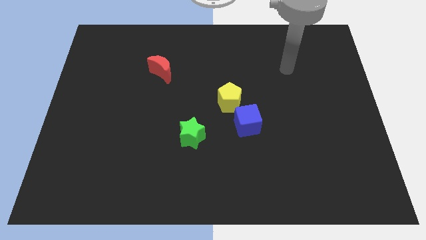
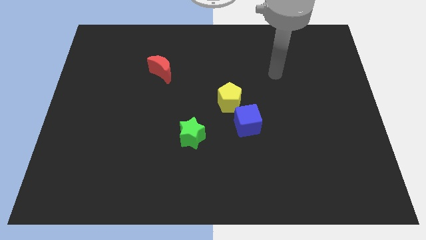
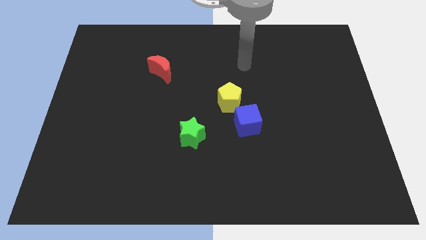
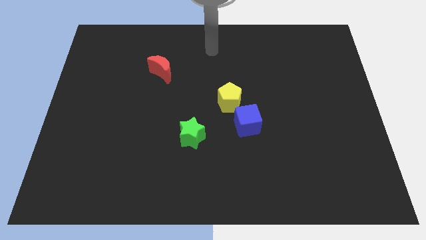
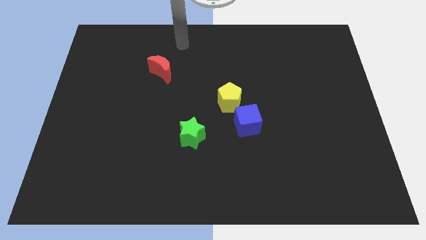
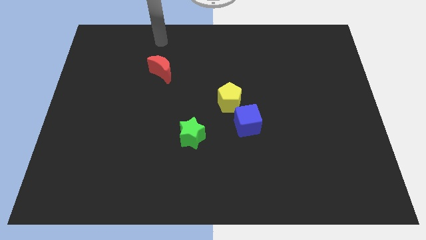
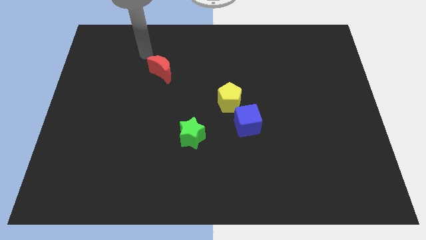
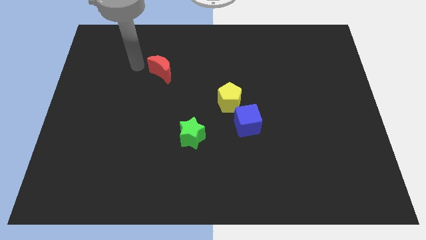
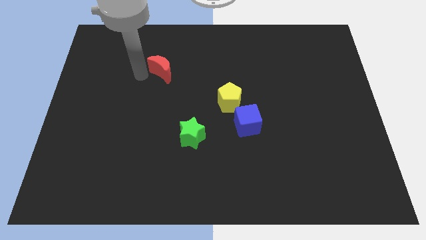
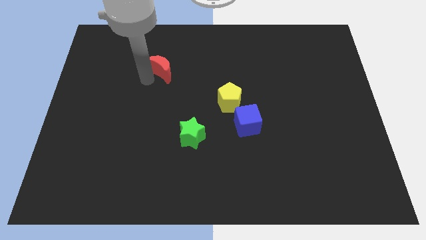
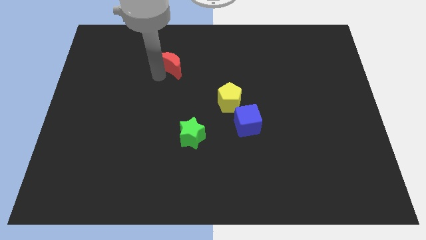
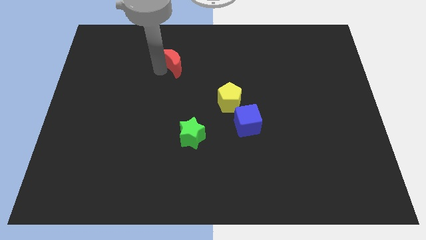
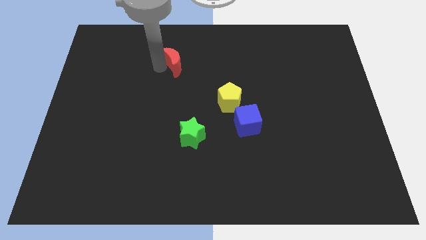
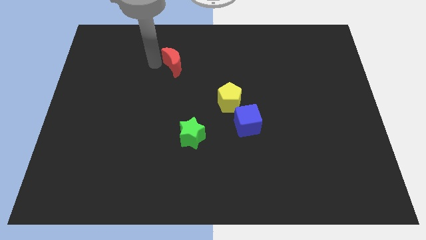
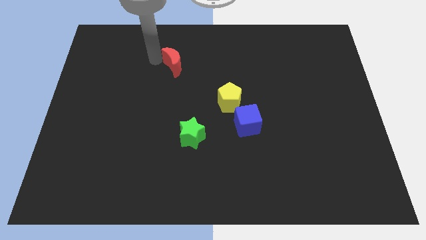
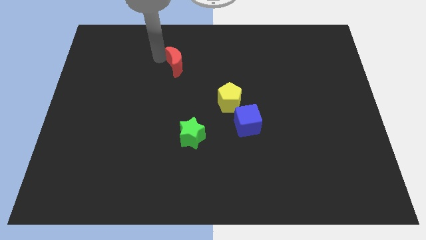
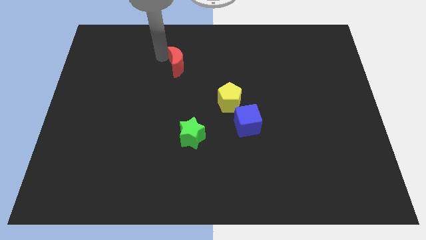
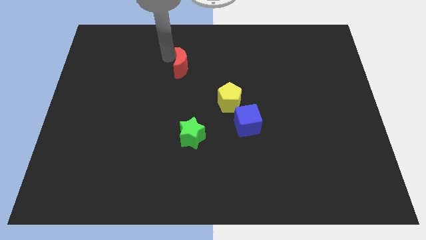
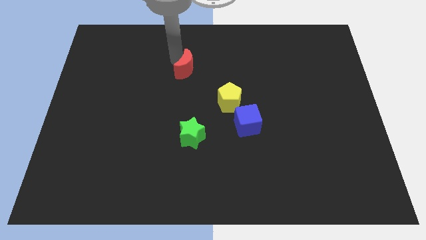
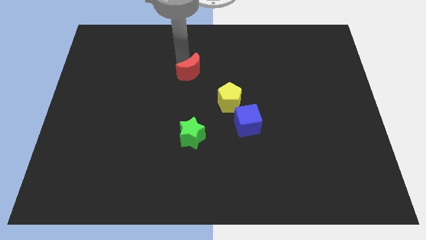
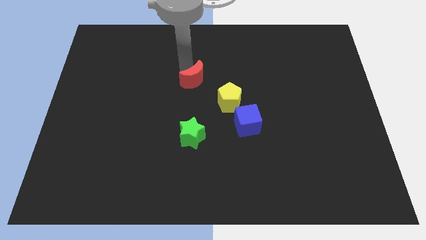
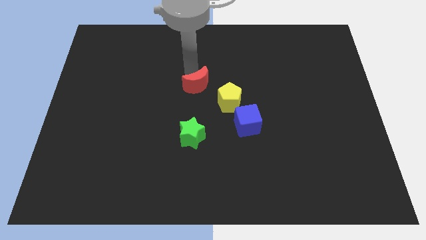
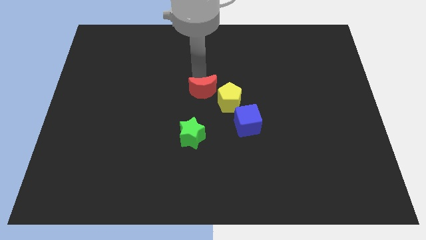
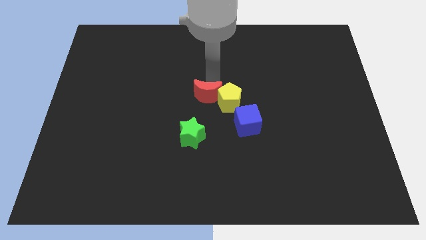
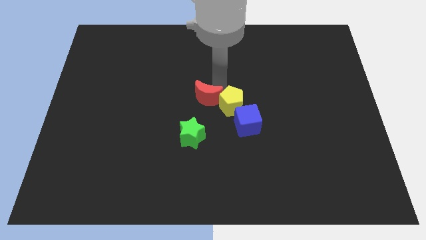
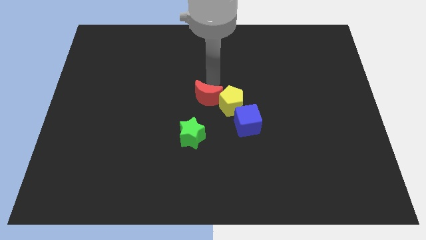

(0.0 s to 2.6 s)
put the moon close to the yellow pentagon

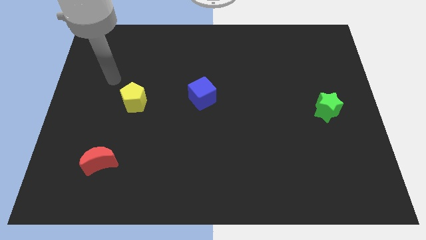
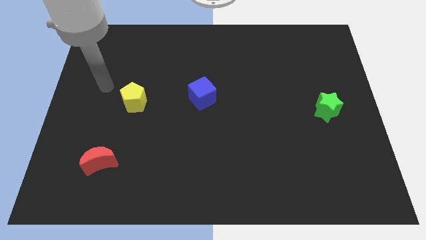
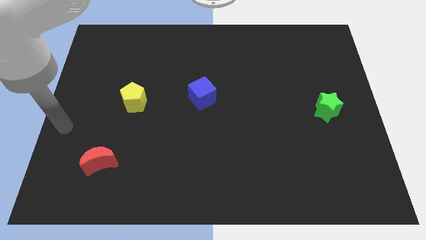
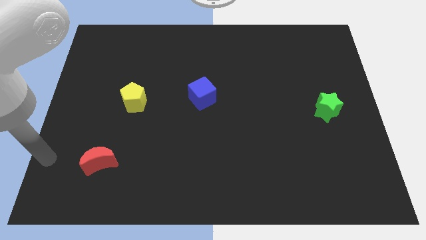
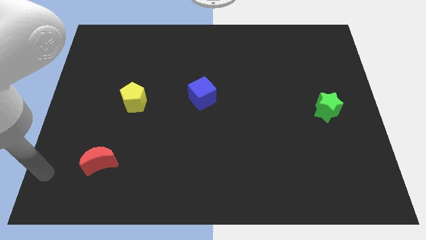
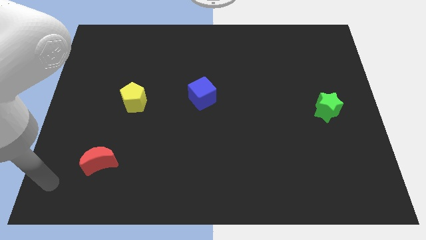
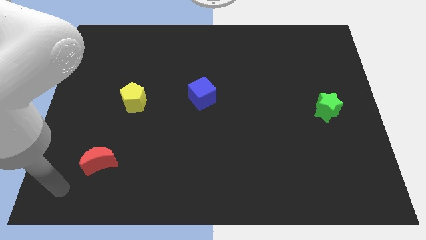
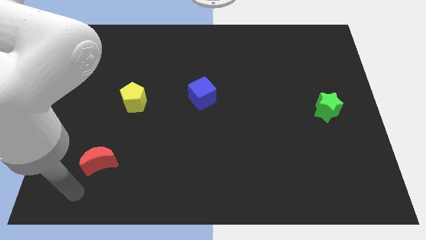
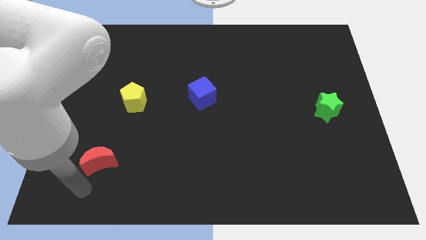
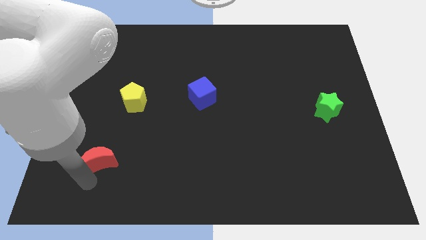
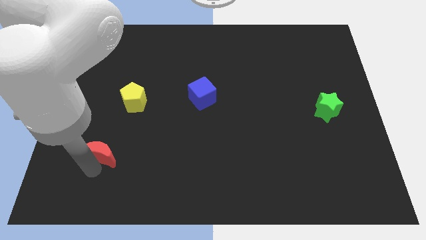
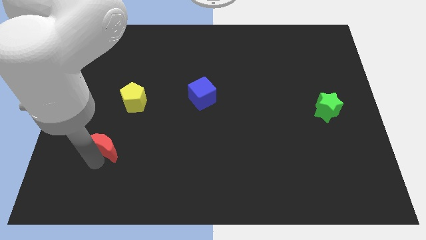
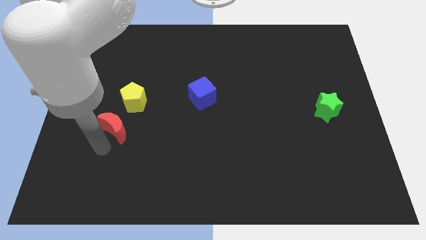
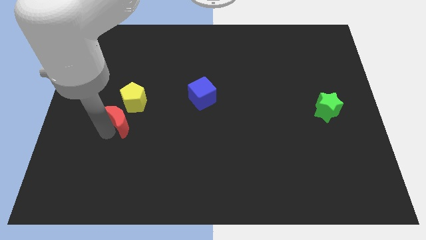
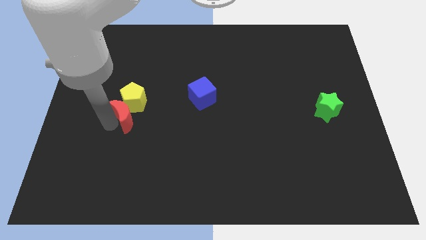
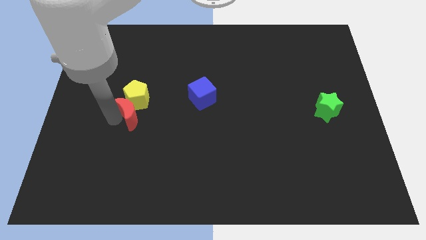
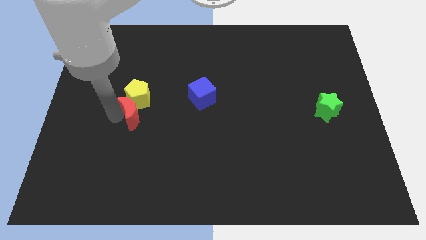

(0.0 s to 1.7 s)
slide the red moon next to the yellow block

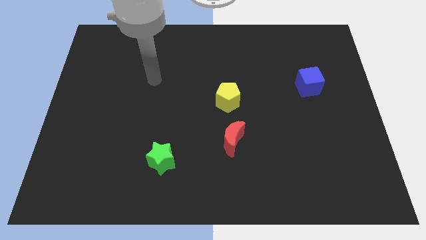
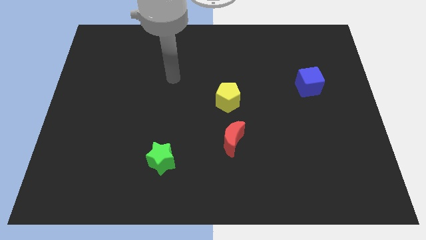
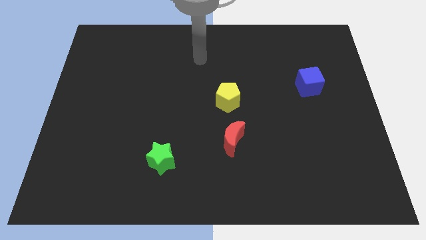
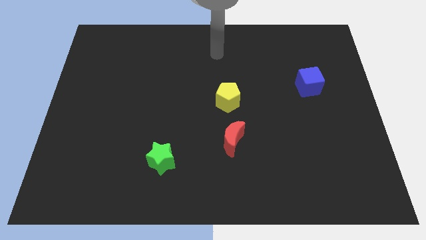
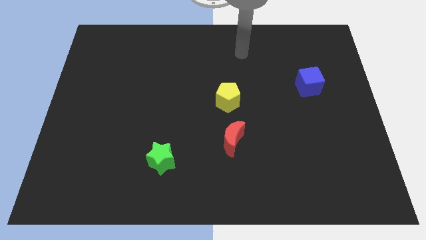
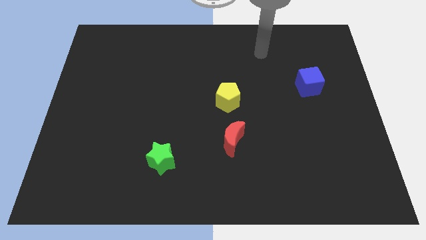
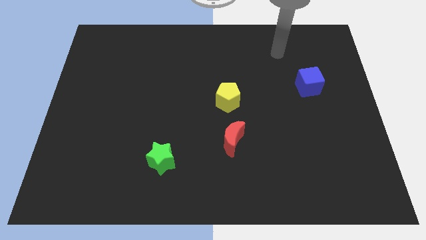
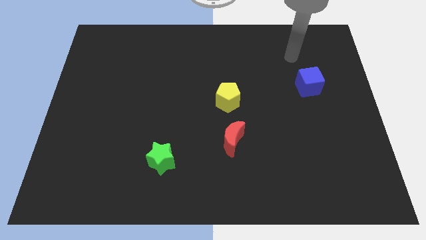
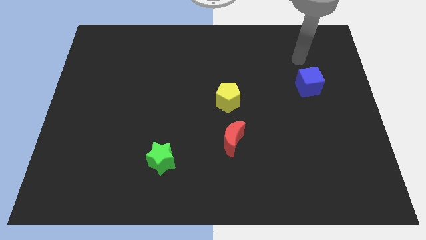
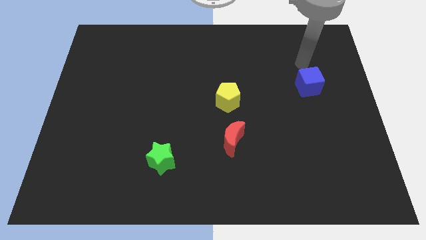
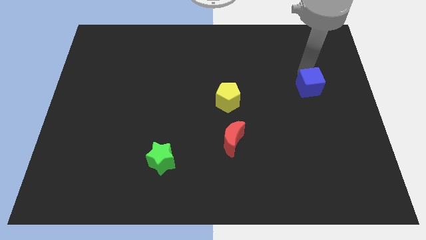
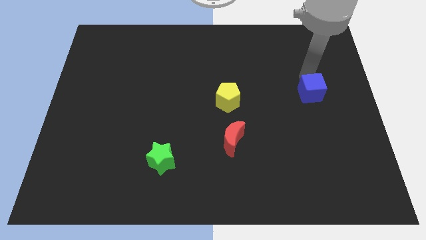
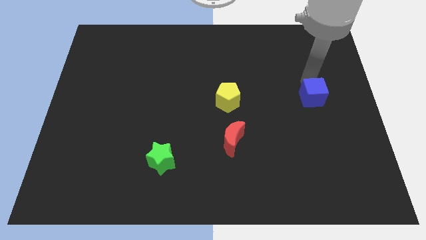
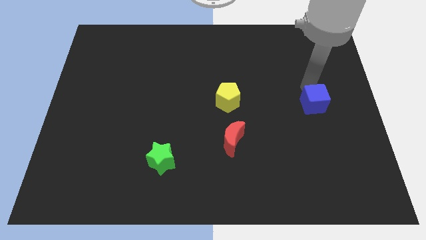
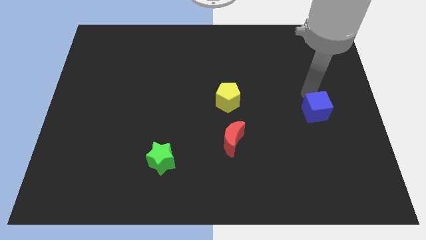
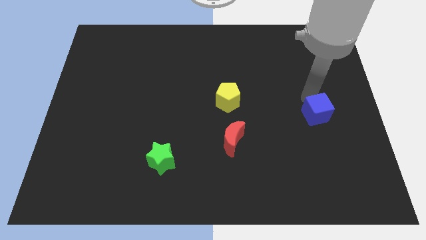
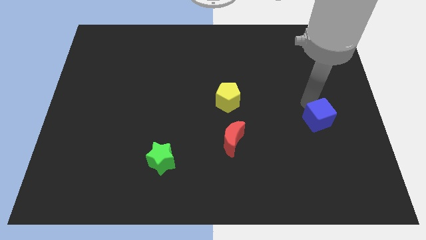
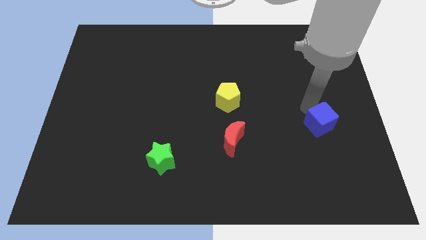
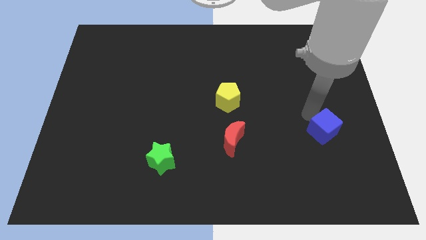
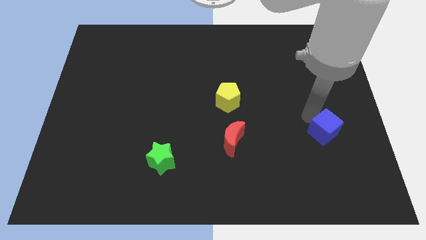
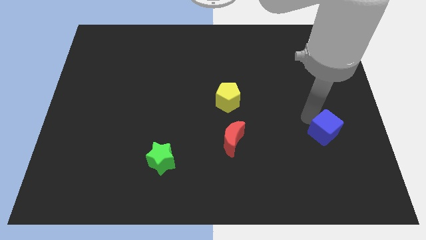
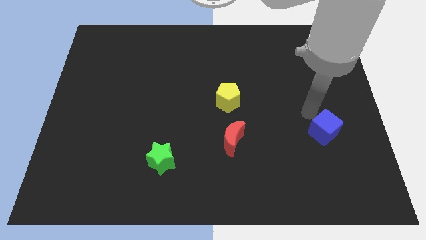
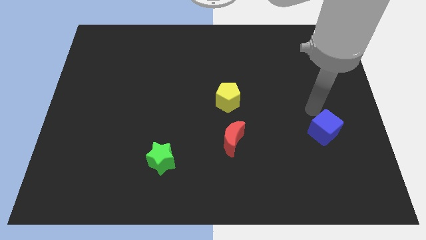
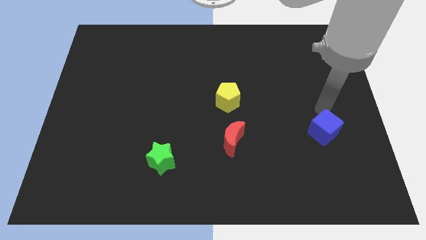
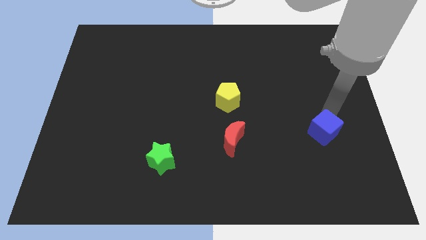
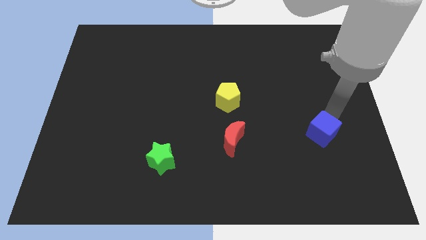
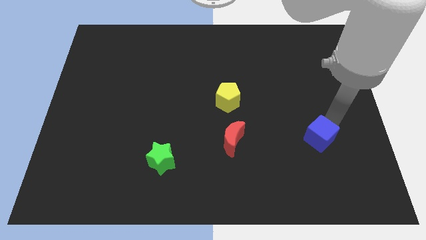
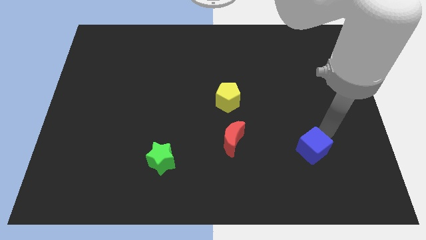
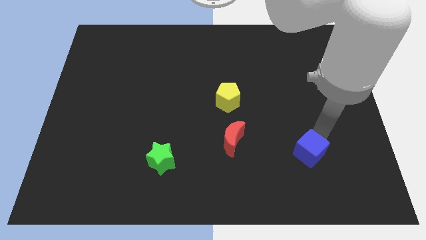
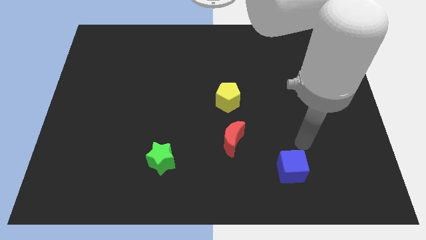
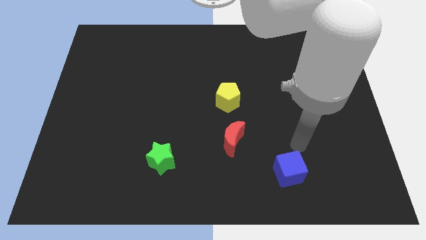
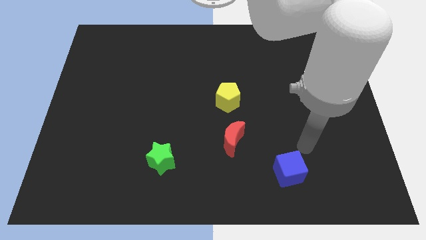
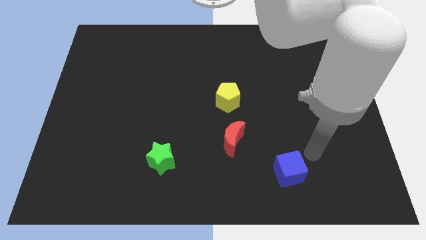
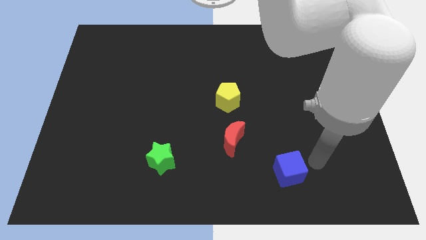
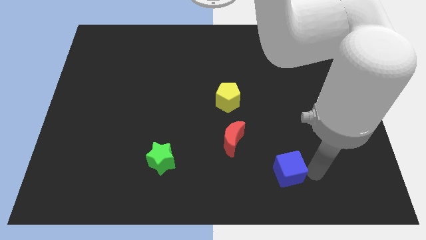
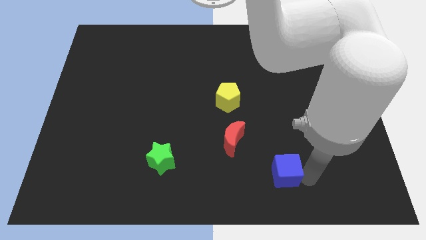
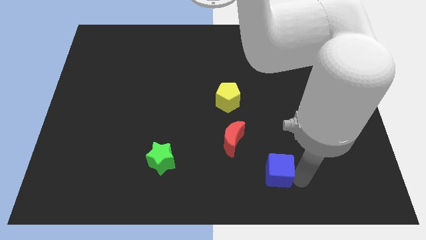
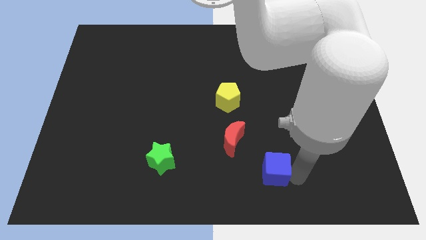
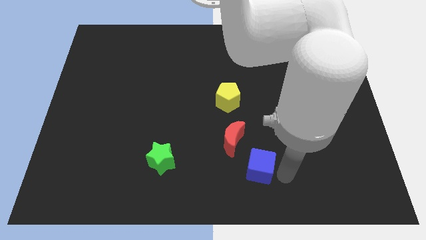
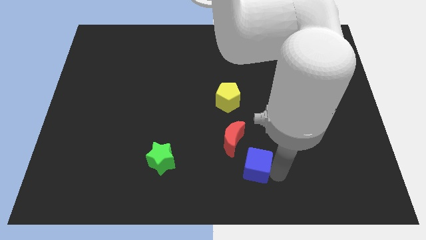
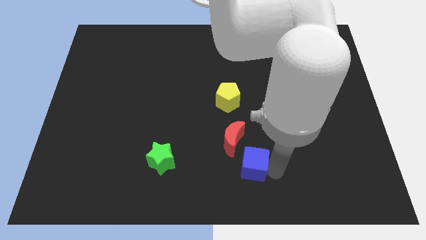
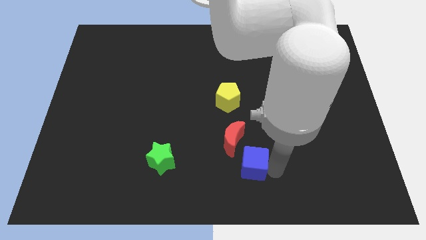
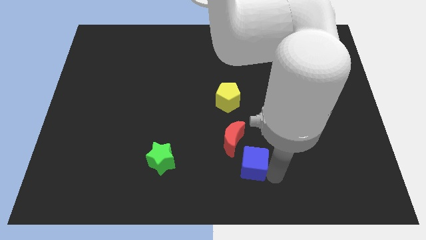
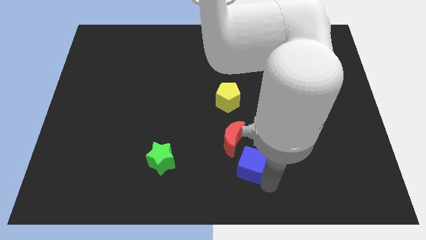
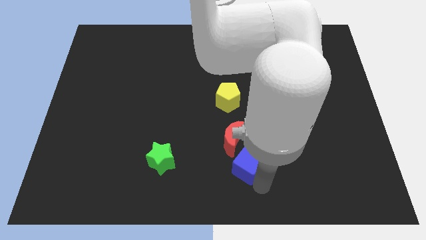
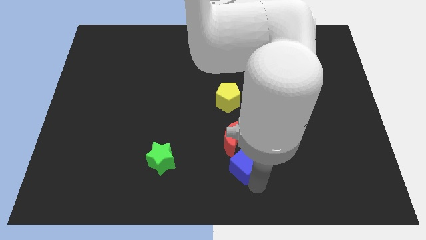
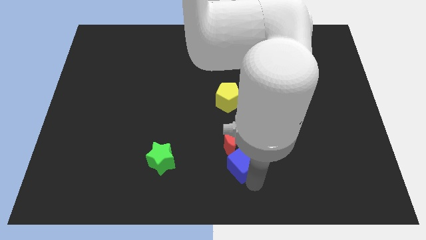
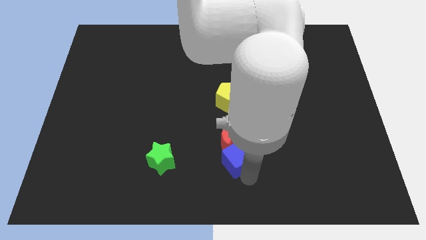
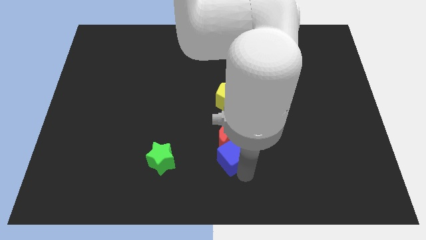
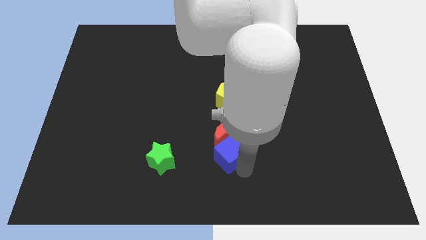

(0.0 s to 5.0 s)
push the blue cube to the red block
